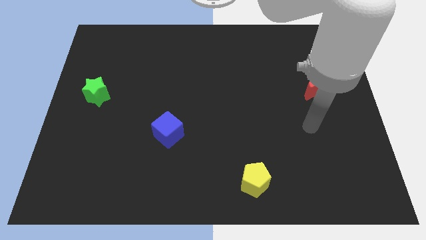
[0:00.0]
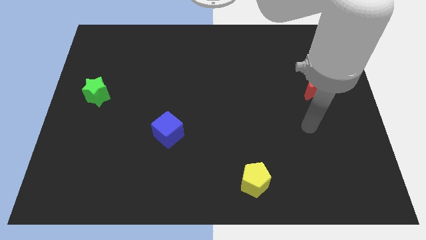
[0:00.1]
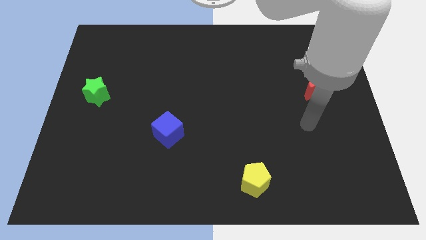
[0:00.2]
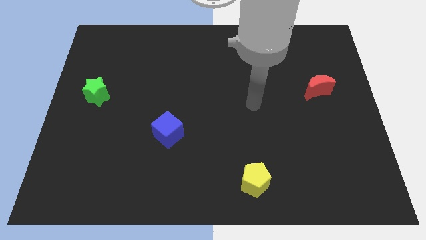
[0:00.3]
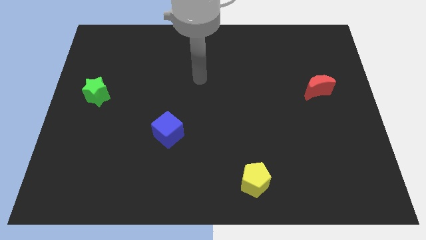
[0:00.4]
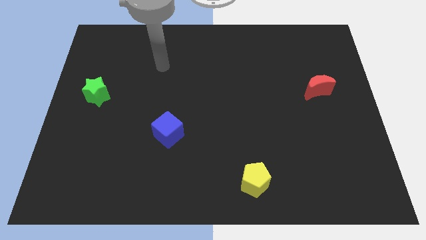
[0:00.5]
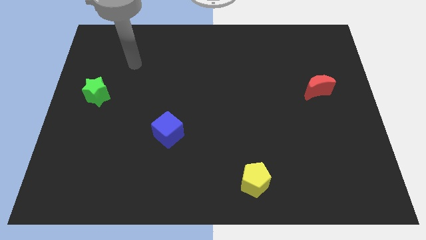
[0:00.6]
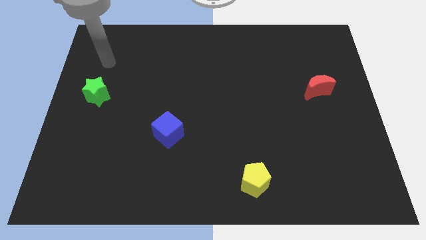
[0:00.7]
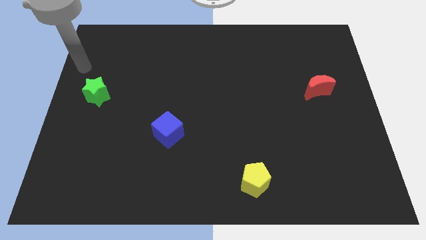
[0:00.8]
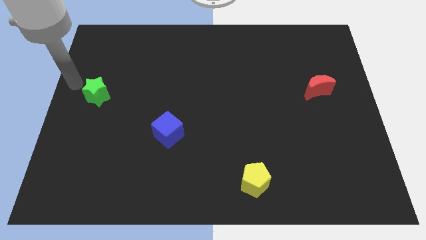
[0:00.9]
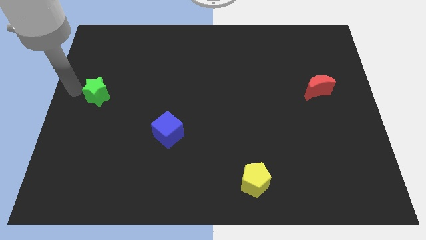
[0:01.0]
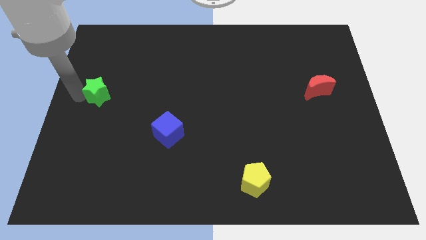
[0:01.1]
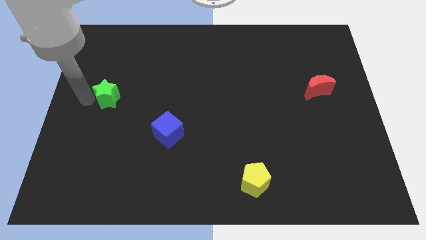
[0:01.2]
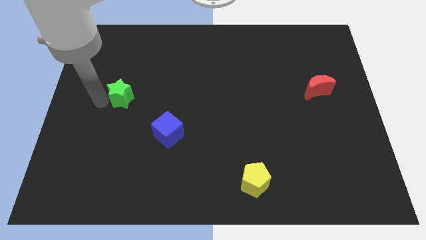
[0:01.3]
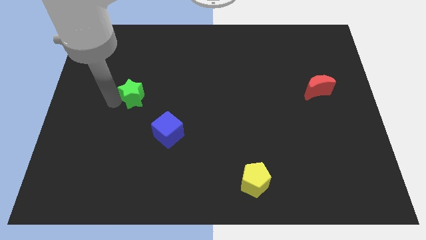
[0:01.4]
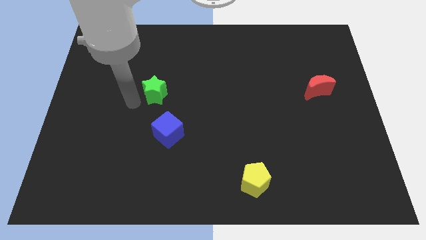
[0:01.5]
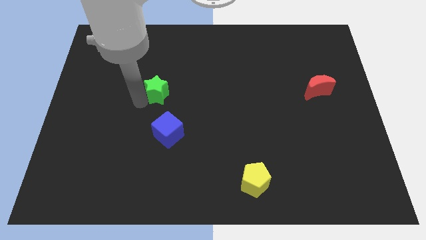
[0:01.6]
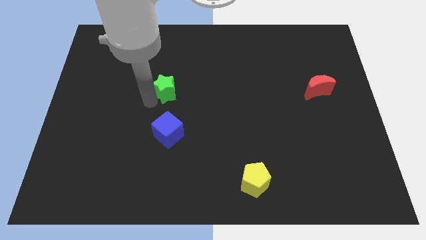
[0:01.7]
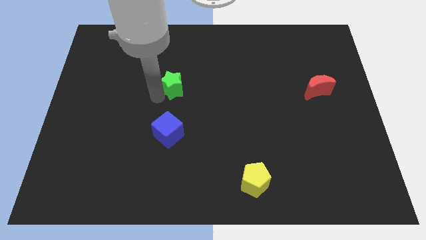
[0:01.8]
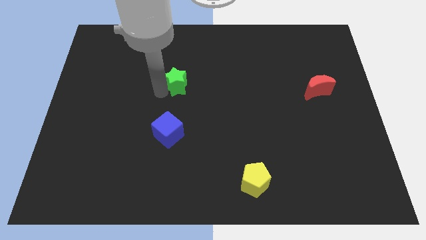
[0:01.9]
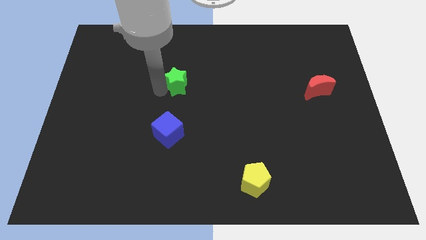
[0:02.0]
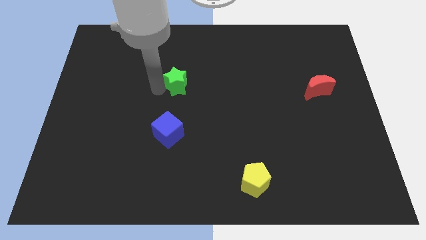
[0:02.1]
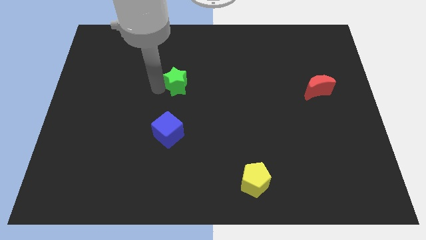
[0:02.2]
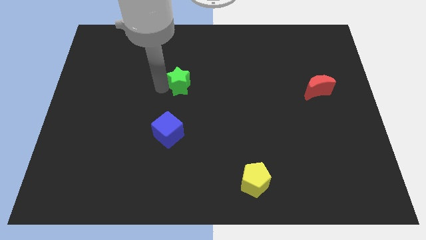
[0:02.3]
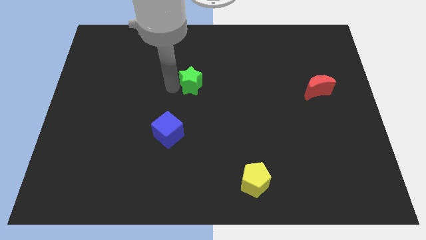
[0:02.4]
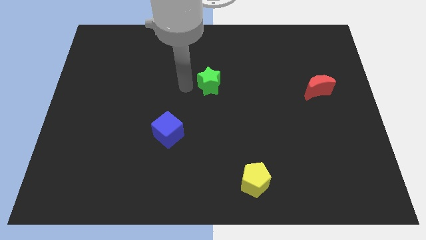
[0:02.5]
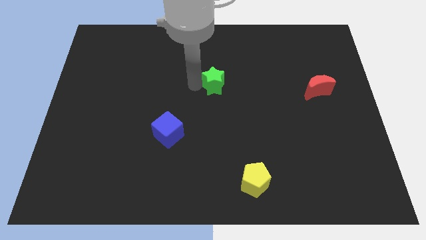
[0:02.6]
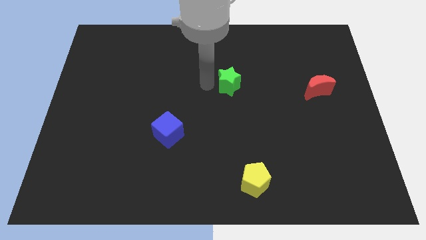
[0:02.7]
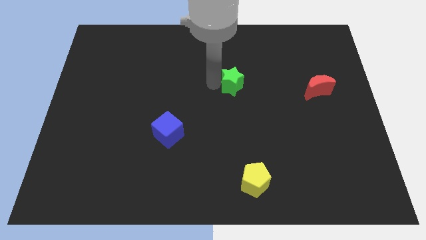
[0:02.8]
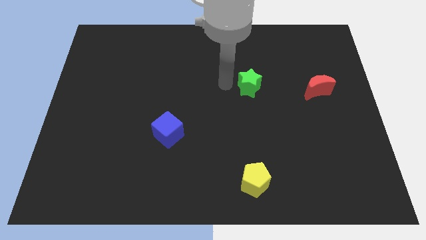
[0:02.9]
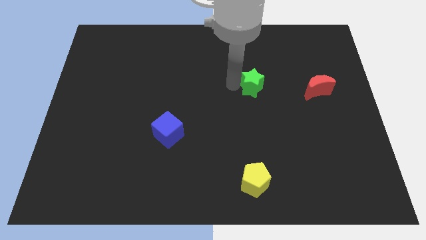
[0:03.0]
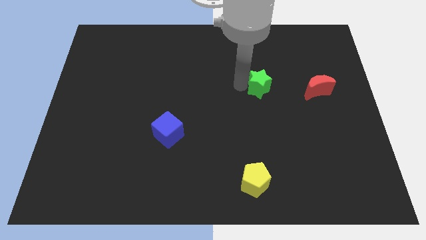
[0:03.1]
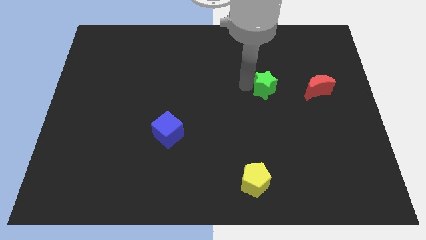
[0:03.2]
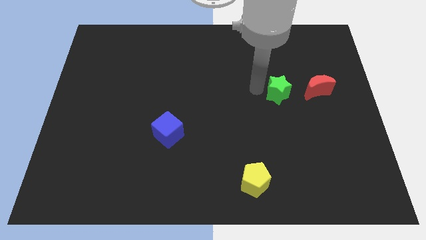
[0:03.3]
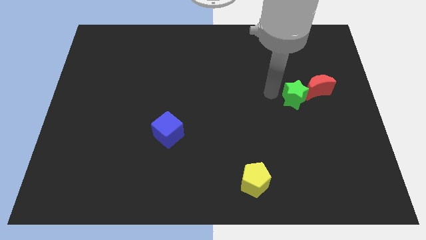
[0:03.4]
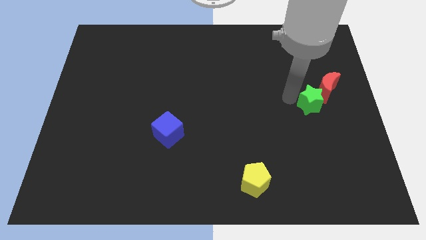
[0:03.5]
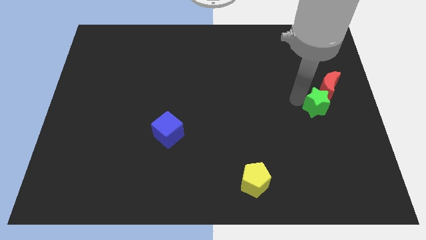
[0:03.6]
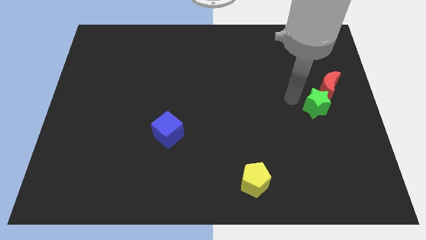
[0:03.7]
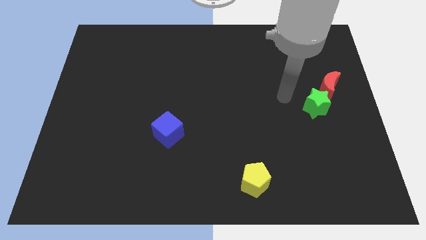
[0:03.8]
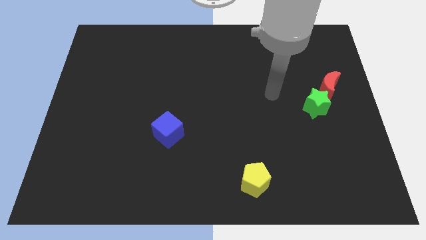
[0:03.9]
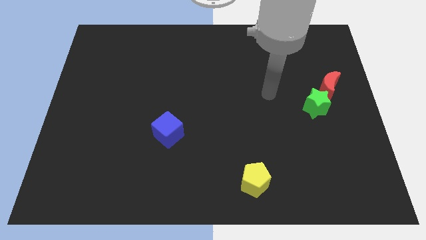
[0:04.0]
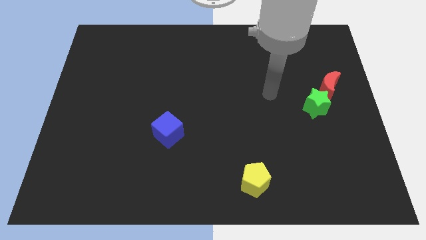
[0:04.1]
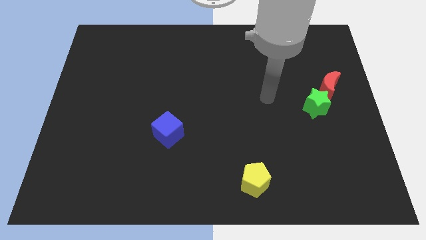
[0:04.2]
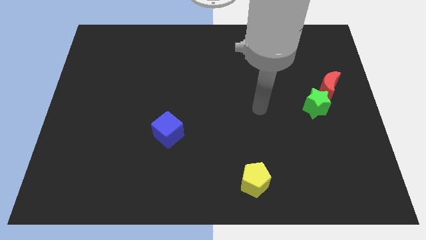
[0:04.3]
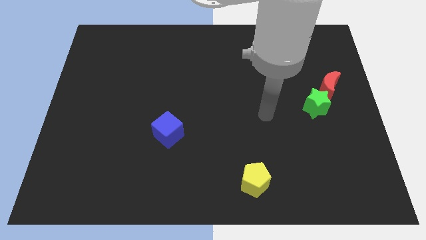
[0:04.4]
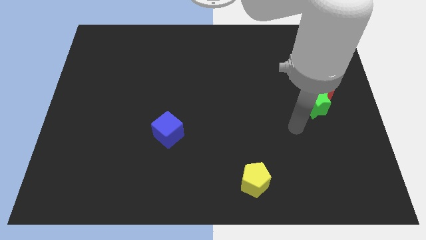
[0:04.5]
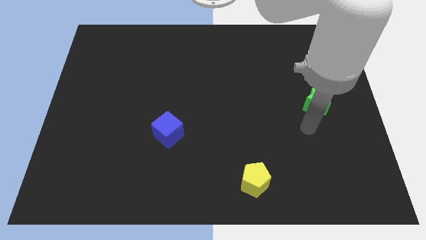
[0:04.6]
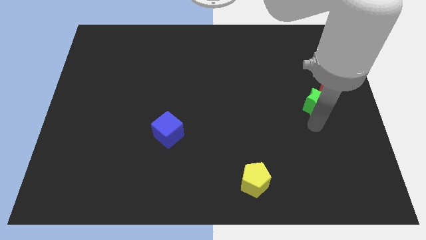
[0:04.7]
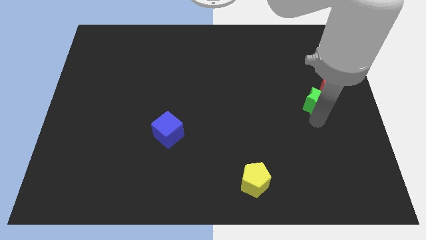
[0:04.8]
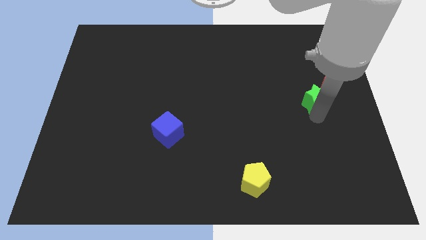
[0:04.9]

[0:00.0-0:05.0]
put the star to the red moon

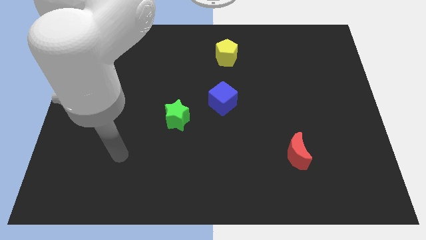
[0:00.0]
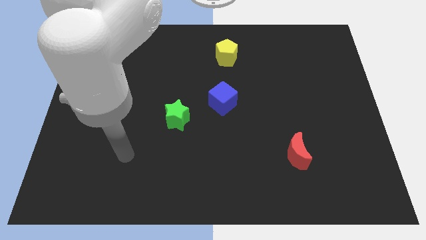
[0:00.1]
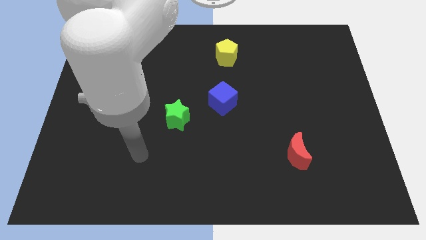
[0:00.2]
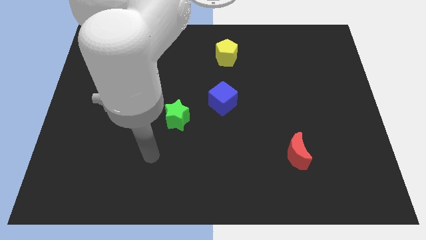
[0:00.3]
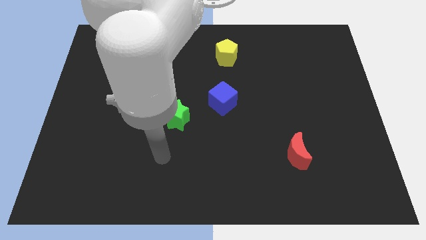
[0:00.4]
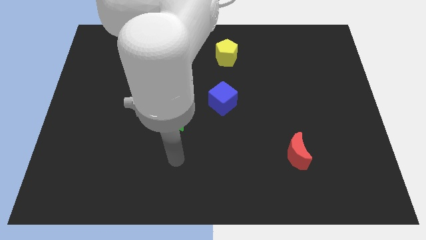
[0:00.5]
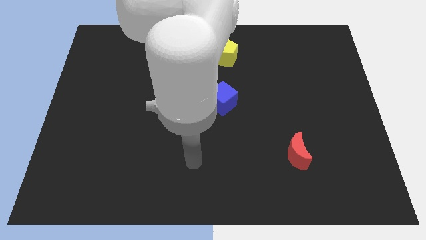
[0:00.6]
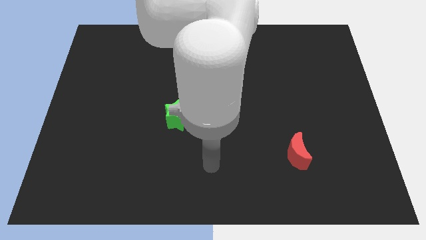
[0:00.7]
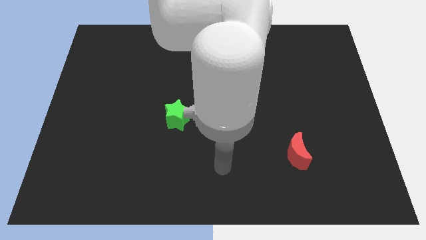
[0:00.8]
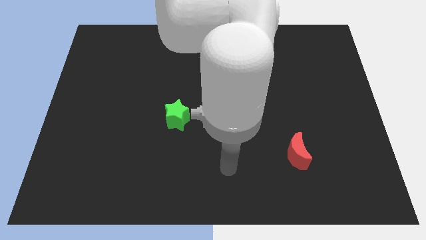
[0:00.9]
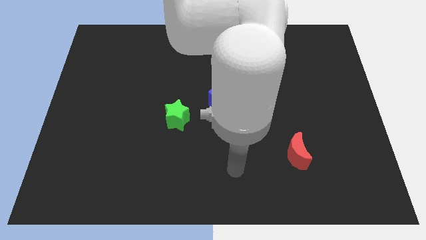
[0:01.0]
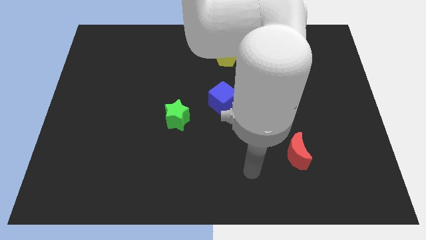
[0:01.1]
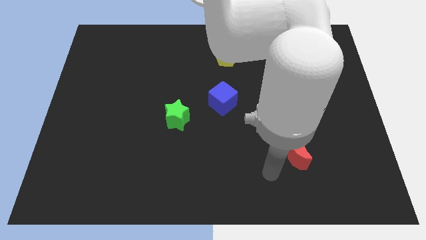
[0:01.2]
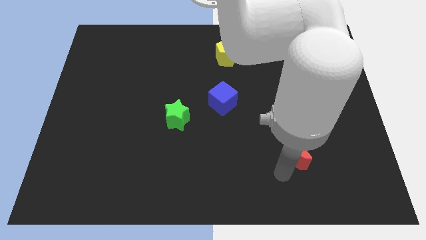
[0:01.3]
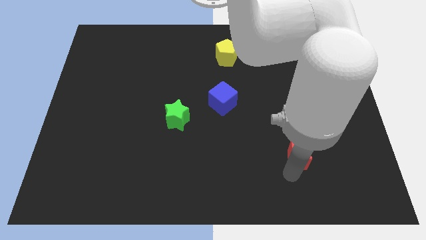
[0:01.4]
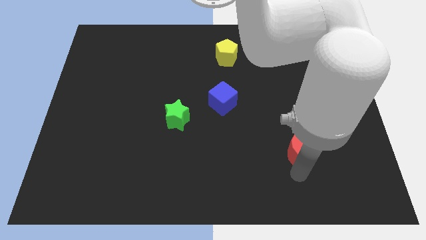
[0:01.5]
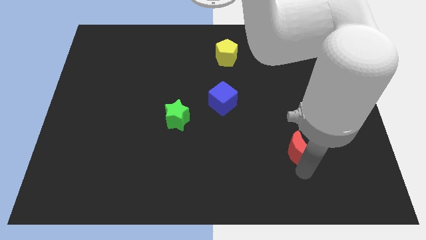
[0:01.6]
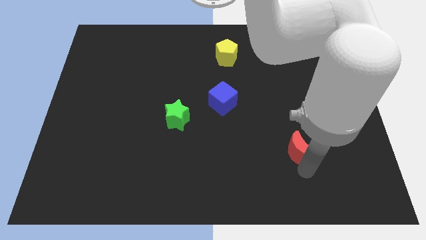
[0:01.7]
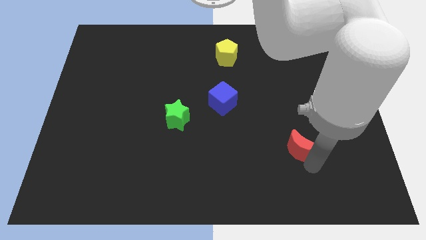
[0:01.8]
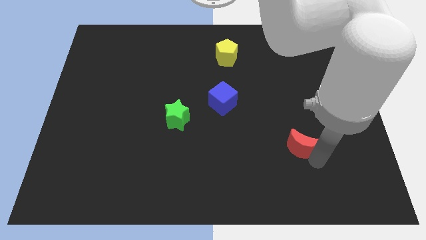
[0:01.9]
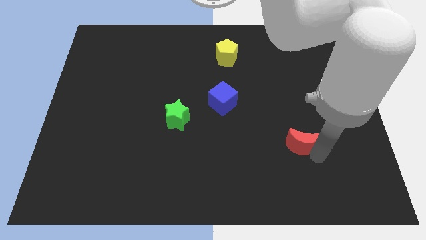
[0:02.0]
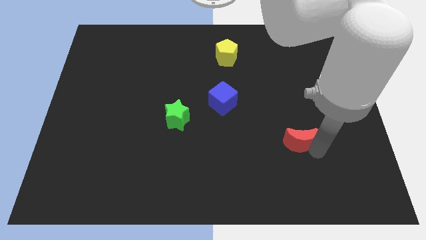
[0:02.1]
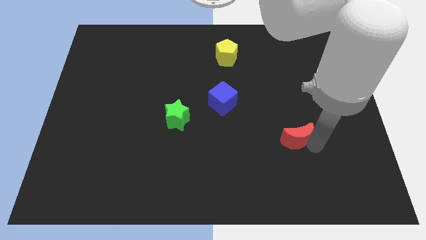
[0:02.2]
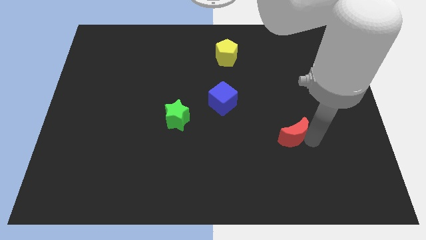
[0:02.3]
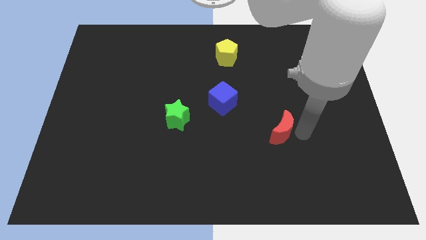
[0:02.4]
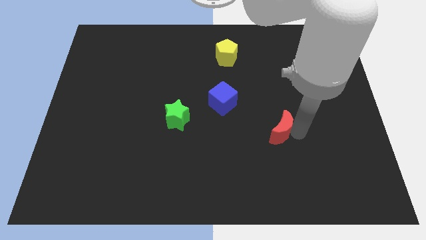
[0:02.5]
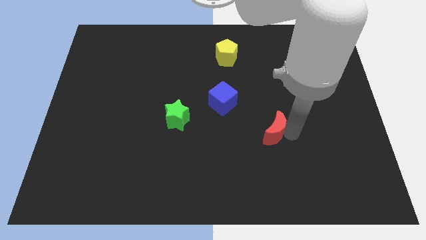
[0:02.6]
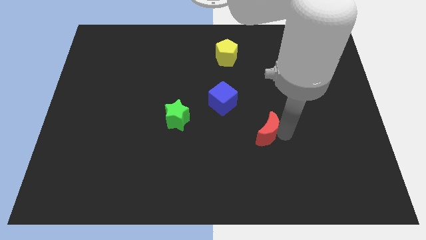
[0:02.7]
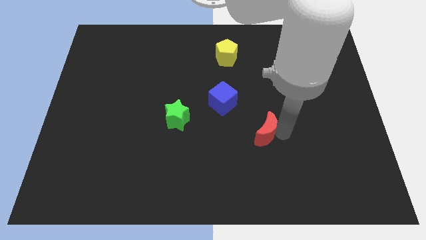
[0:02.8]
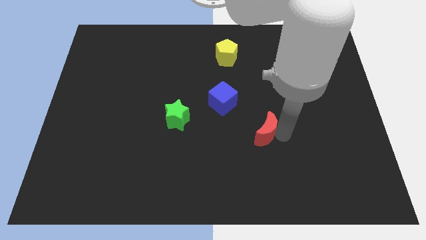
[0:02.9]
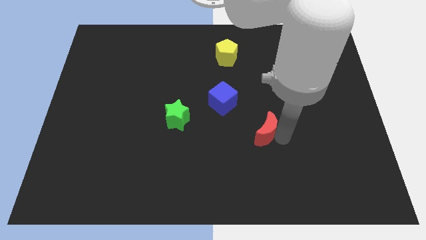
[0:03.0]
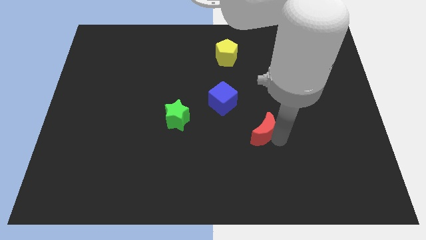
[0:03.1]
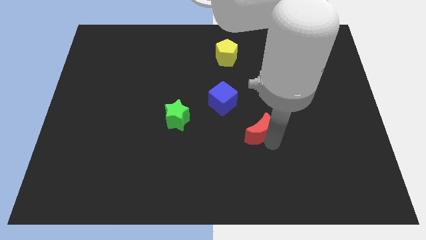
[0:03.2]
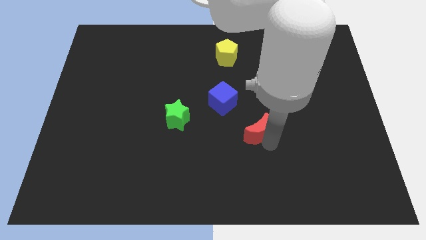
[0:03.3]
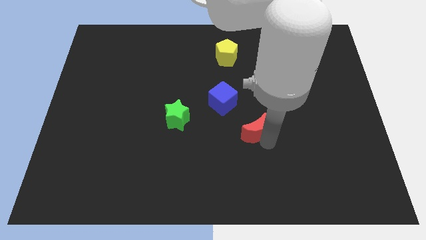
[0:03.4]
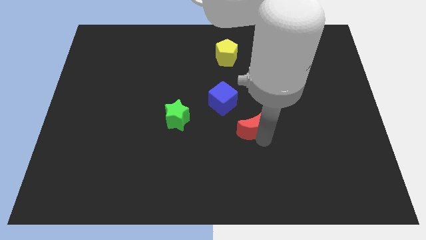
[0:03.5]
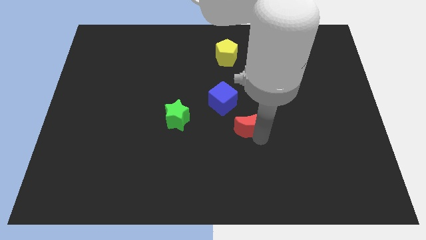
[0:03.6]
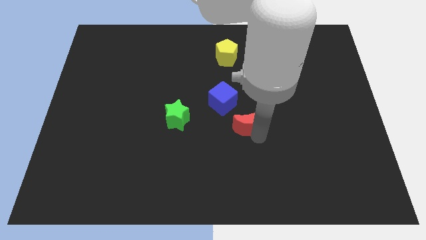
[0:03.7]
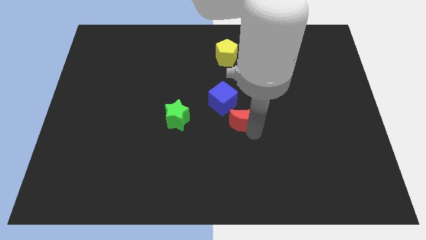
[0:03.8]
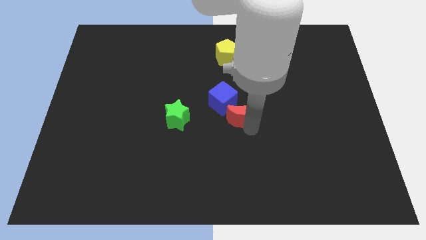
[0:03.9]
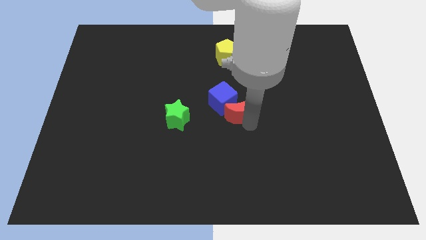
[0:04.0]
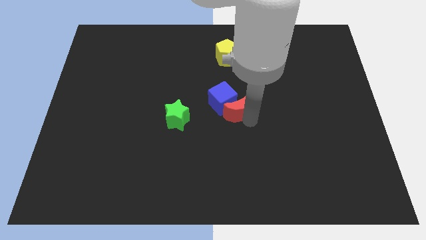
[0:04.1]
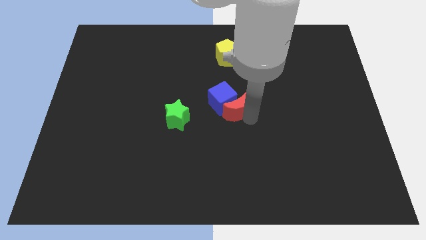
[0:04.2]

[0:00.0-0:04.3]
put the red moon to the cube
